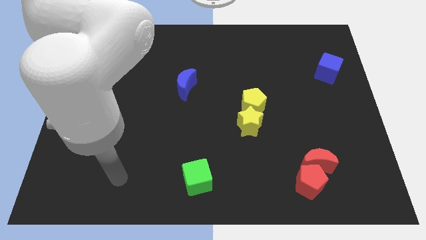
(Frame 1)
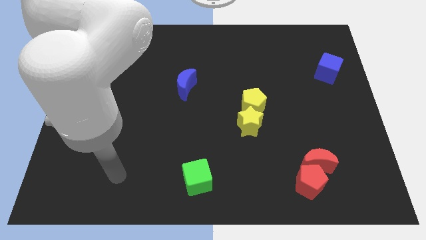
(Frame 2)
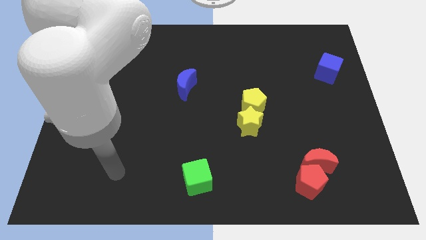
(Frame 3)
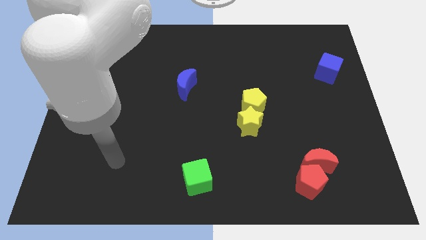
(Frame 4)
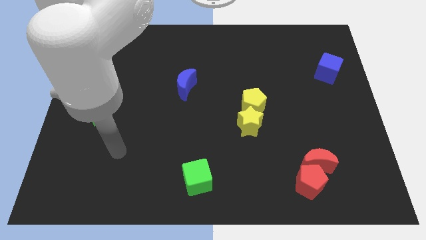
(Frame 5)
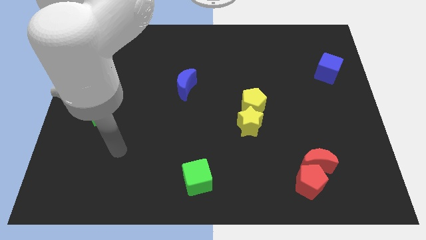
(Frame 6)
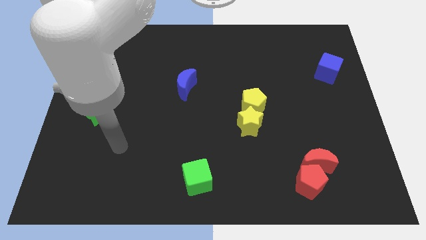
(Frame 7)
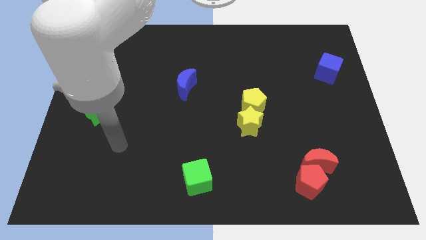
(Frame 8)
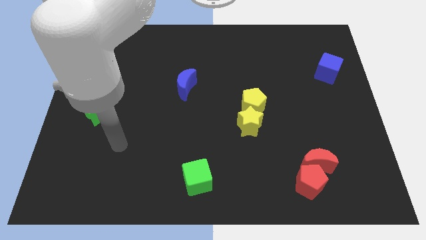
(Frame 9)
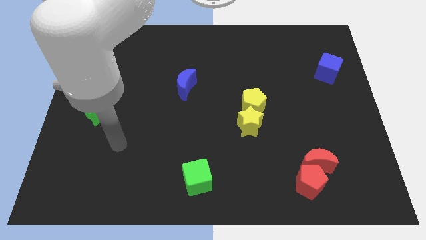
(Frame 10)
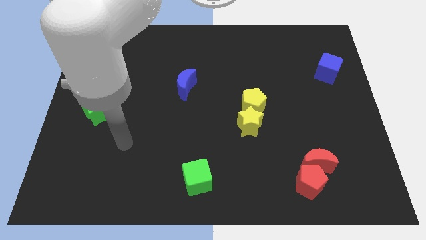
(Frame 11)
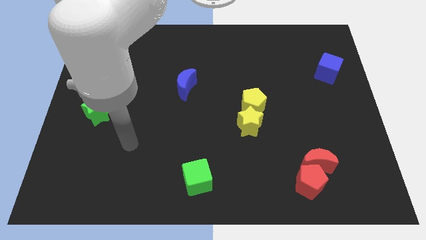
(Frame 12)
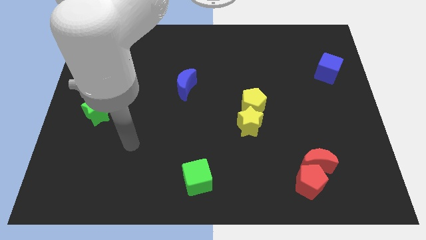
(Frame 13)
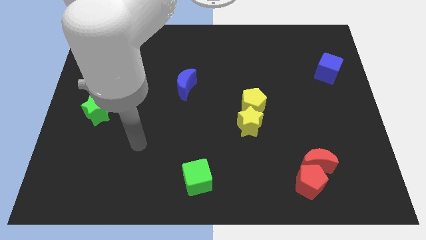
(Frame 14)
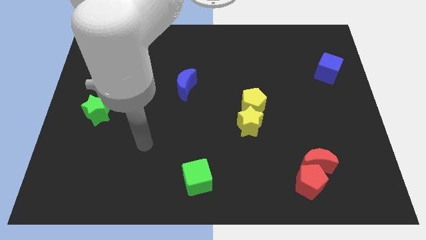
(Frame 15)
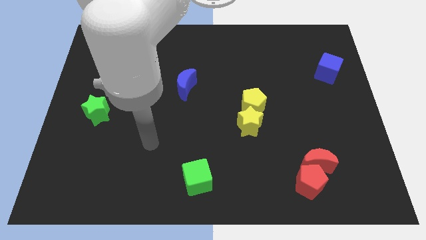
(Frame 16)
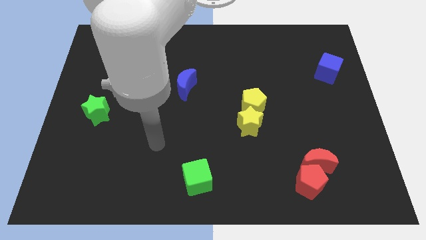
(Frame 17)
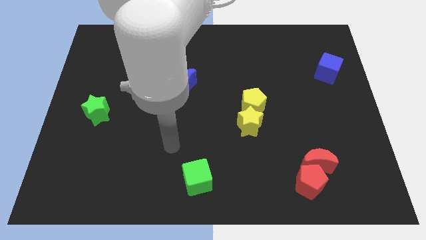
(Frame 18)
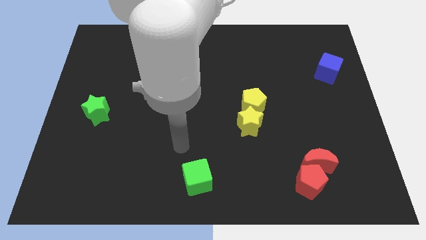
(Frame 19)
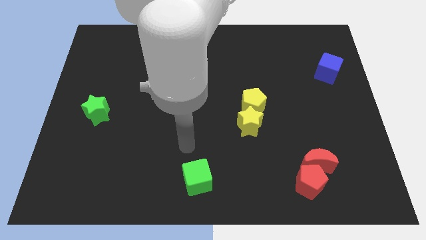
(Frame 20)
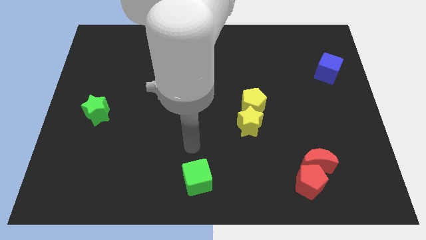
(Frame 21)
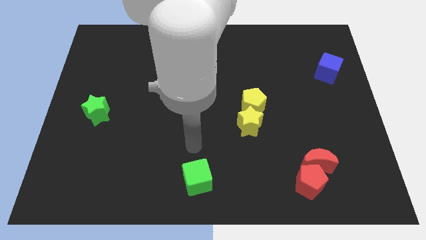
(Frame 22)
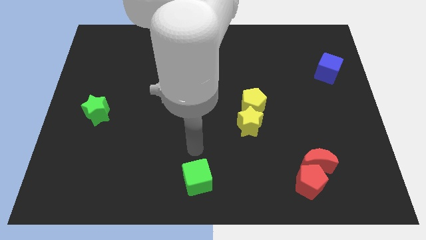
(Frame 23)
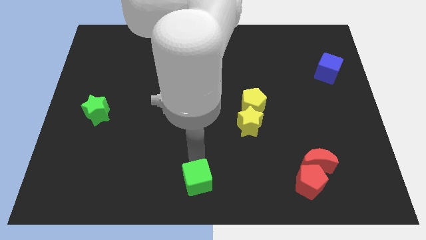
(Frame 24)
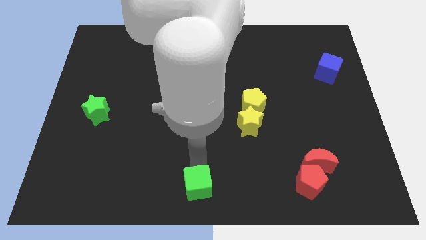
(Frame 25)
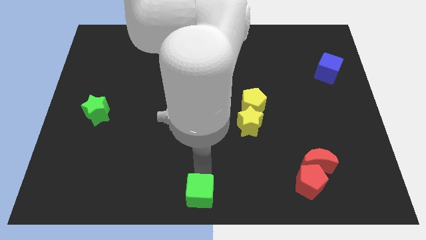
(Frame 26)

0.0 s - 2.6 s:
move your arm to the top of the green cube

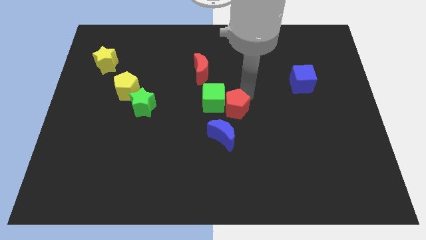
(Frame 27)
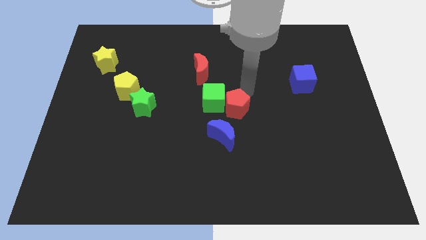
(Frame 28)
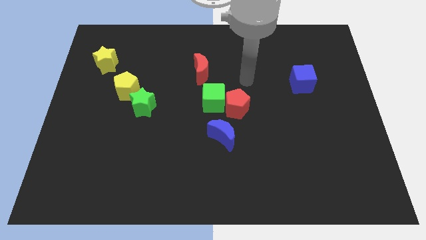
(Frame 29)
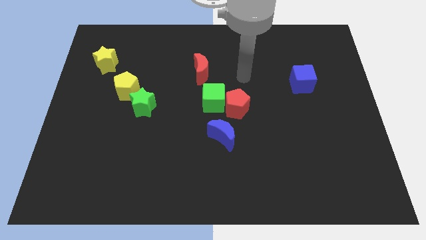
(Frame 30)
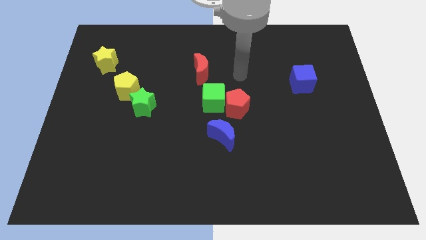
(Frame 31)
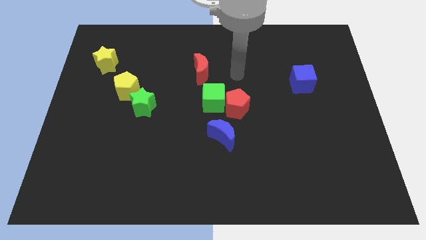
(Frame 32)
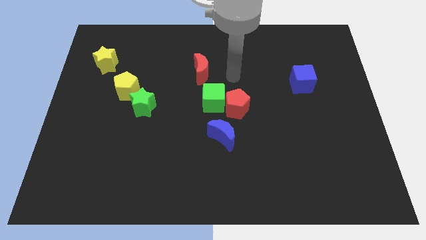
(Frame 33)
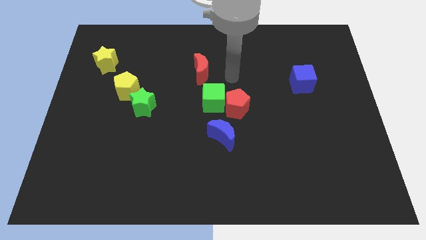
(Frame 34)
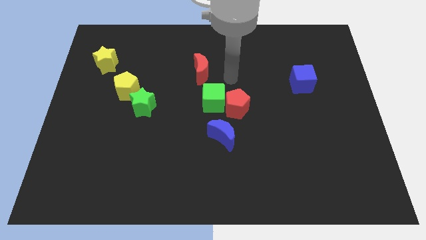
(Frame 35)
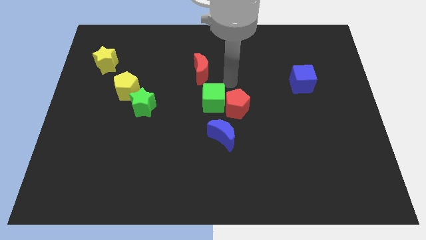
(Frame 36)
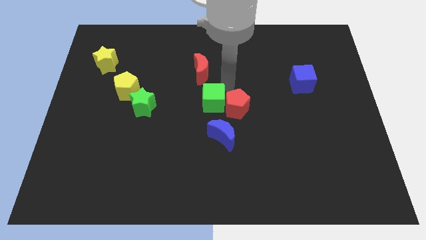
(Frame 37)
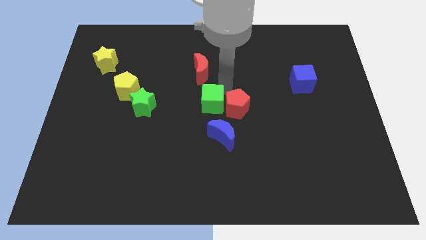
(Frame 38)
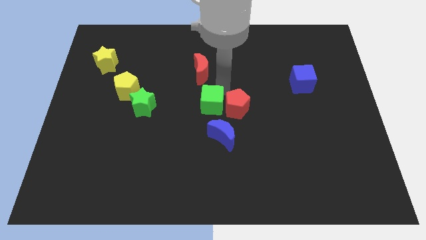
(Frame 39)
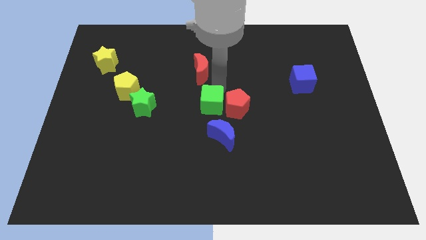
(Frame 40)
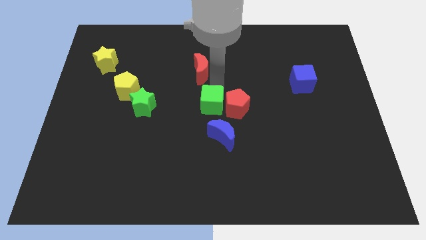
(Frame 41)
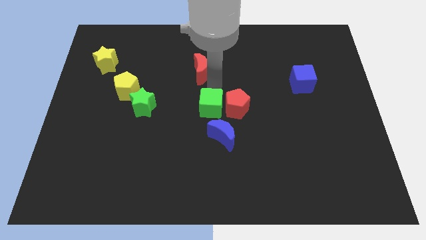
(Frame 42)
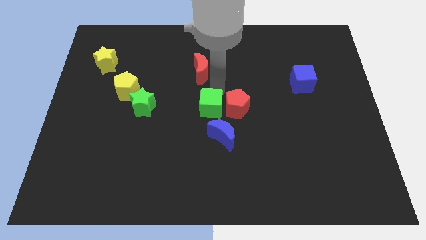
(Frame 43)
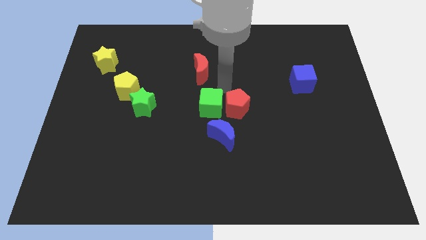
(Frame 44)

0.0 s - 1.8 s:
slide the green cube to the left of the red pentagon

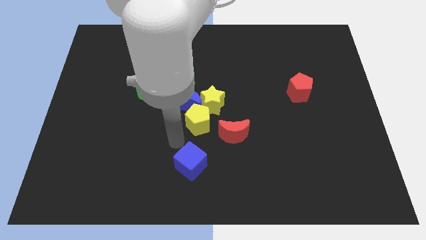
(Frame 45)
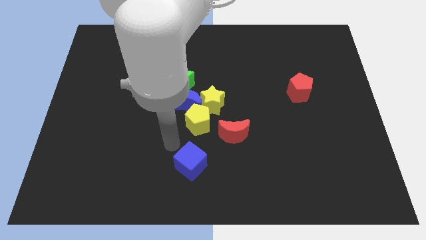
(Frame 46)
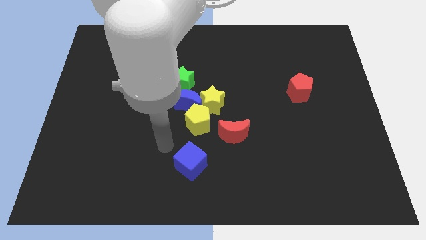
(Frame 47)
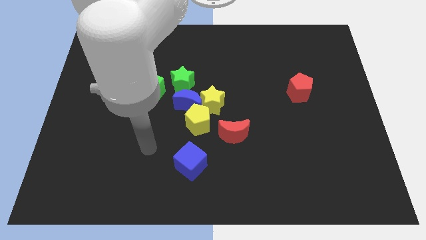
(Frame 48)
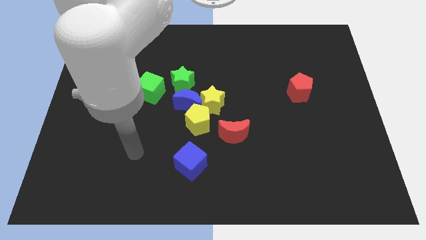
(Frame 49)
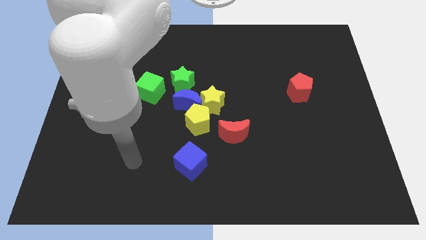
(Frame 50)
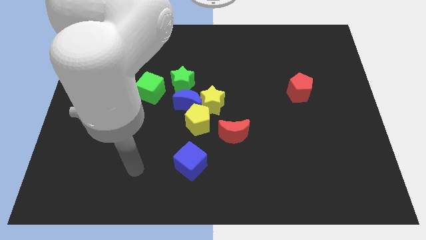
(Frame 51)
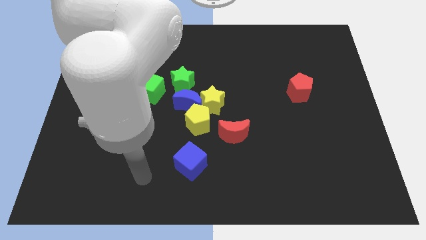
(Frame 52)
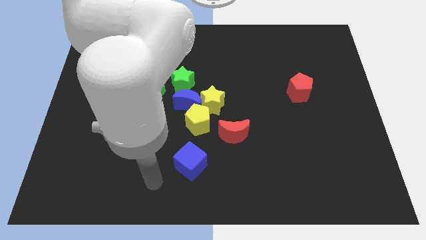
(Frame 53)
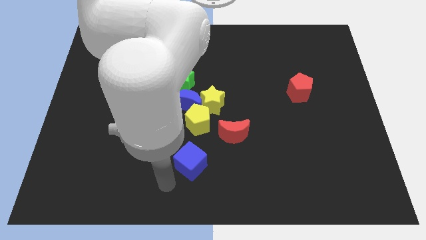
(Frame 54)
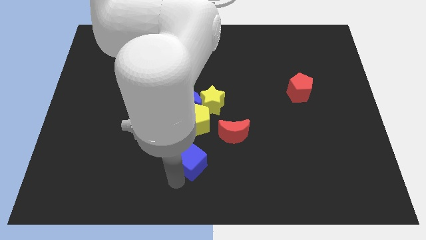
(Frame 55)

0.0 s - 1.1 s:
move your arm towards the blue cube

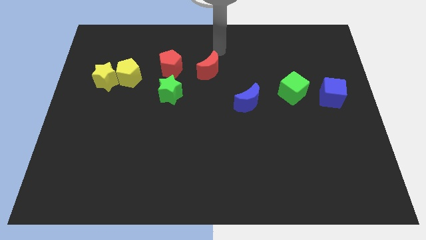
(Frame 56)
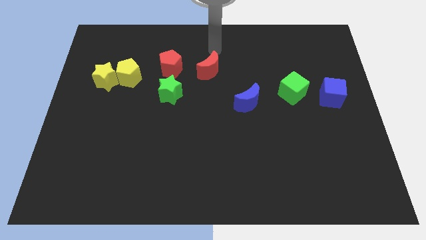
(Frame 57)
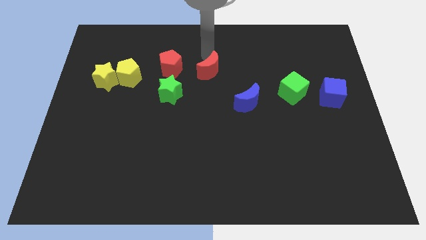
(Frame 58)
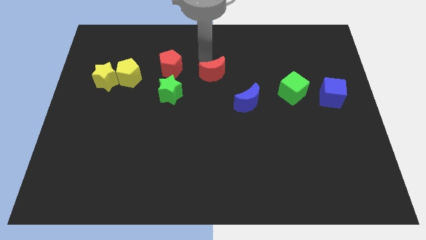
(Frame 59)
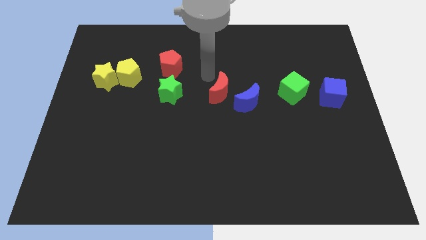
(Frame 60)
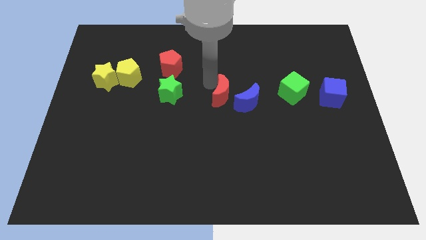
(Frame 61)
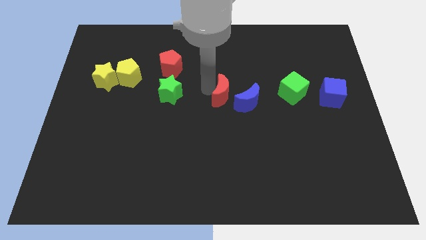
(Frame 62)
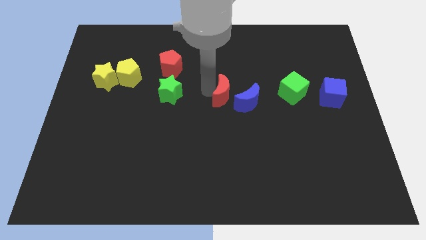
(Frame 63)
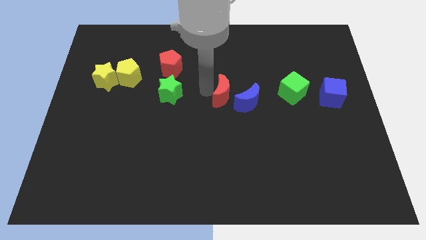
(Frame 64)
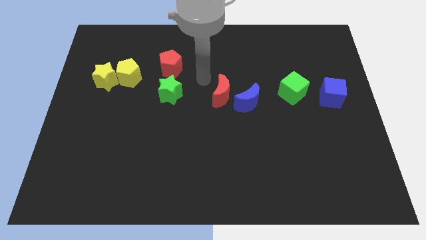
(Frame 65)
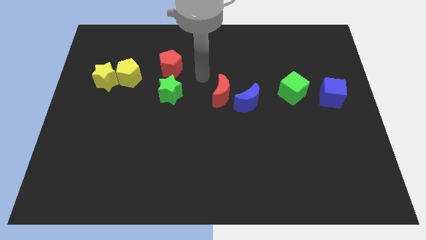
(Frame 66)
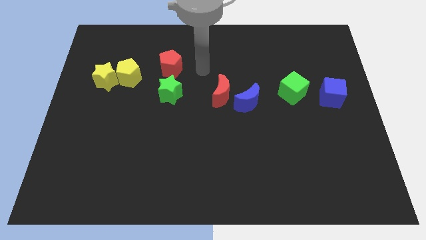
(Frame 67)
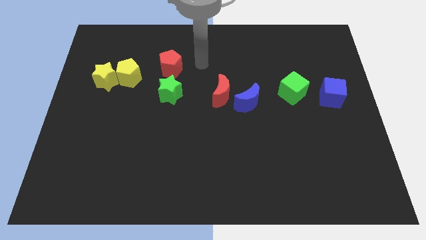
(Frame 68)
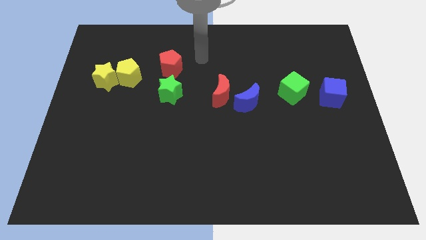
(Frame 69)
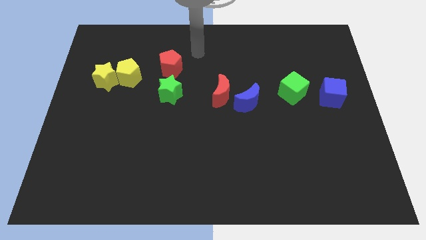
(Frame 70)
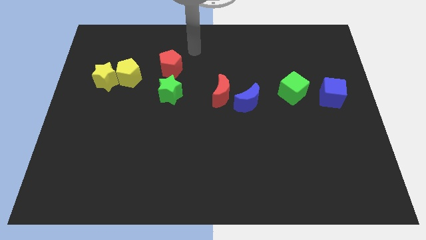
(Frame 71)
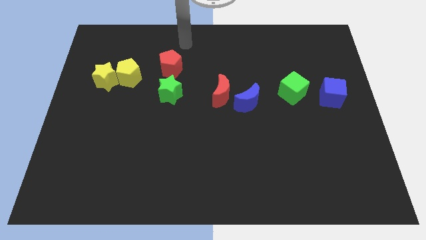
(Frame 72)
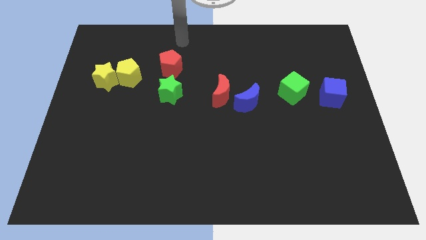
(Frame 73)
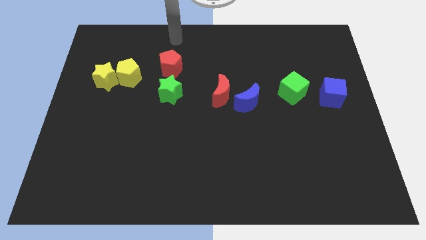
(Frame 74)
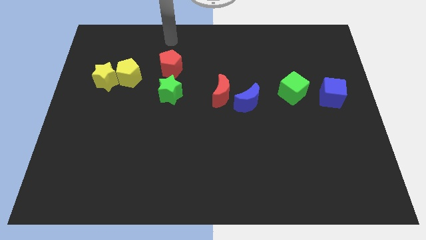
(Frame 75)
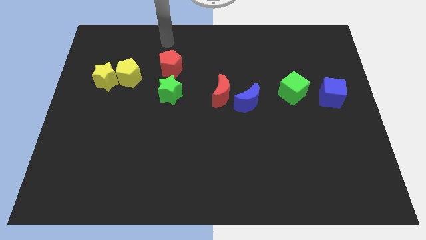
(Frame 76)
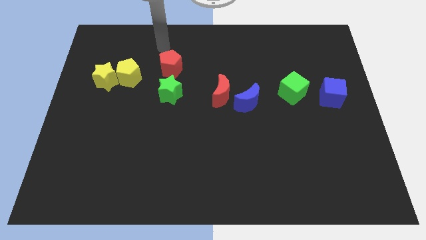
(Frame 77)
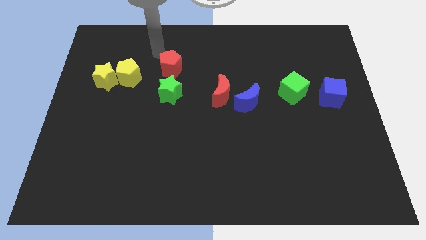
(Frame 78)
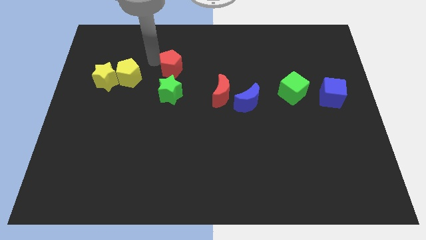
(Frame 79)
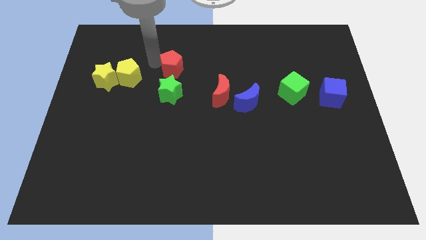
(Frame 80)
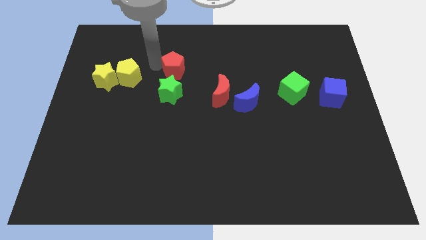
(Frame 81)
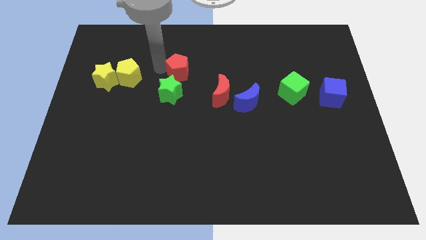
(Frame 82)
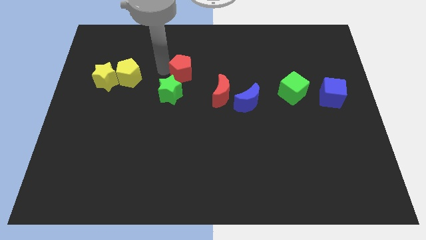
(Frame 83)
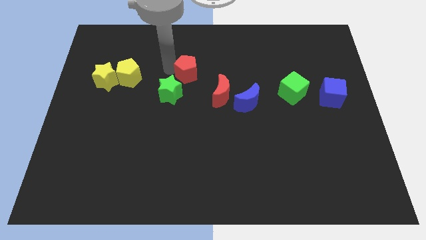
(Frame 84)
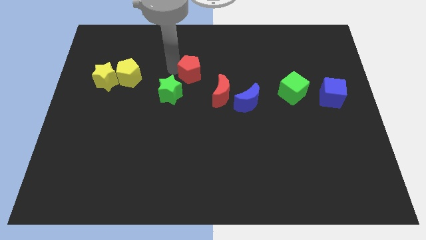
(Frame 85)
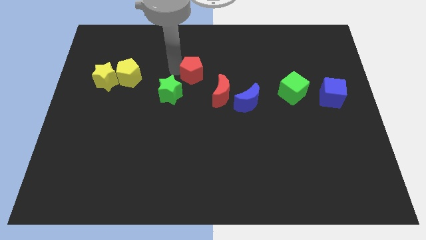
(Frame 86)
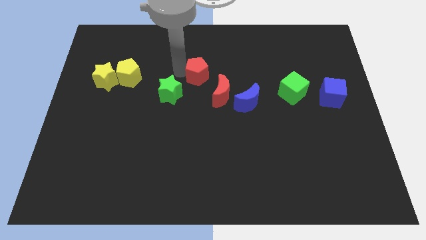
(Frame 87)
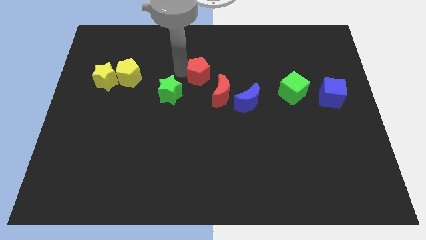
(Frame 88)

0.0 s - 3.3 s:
move the red moon and red pentagon towards the left side of the blue moon
